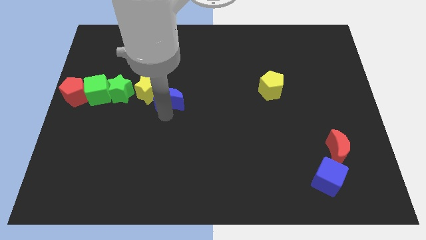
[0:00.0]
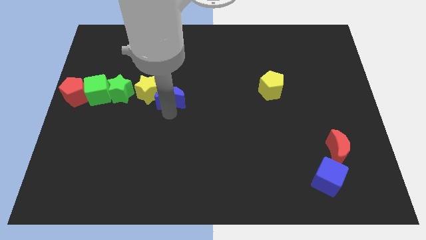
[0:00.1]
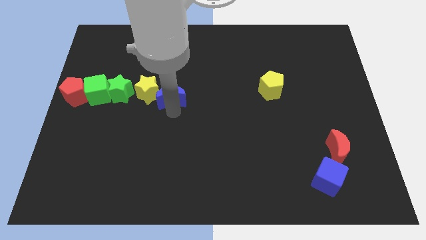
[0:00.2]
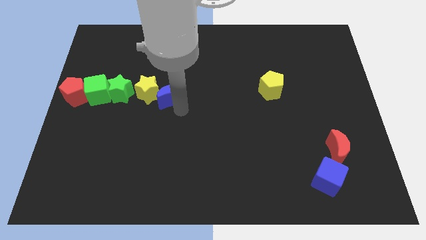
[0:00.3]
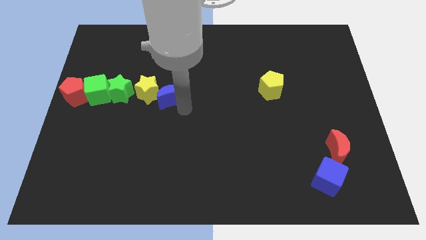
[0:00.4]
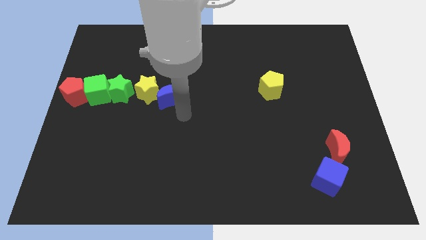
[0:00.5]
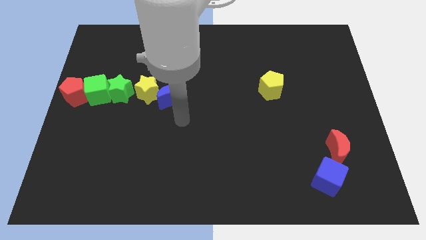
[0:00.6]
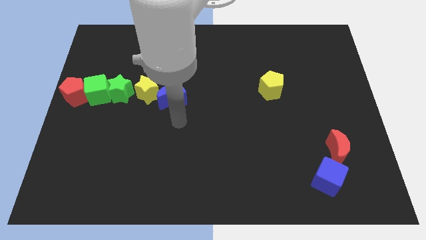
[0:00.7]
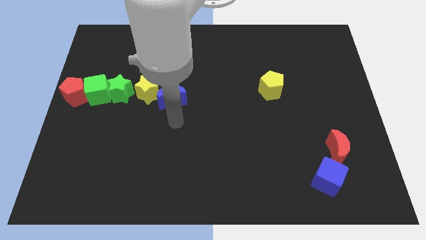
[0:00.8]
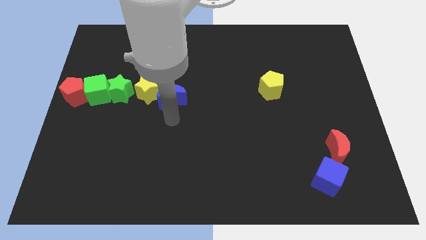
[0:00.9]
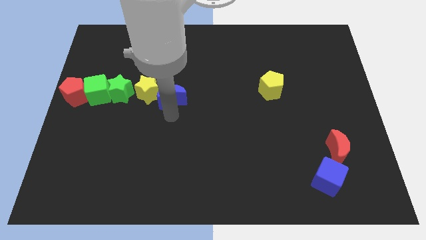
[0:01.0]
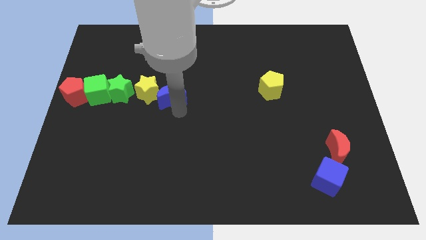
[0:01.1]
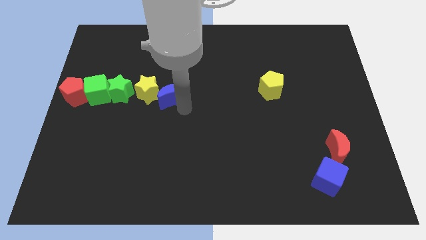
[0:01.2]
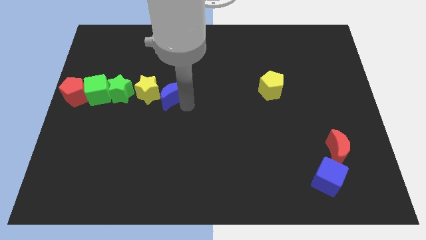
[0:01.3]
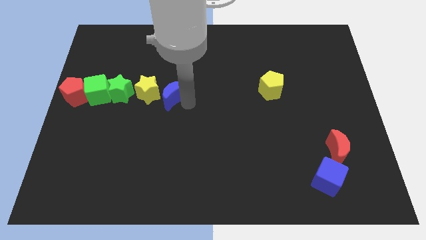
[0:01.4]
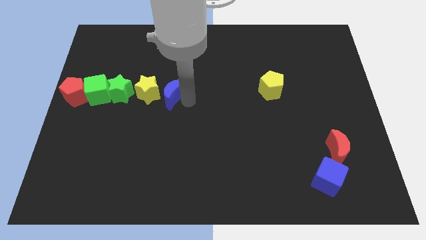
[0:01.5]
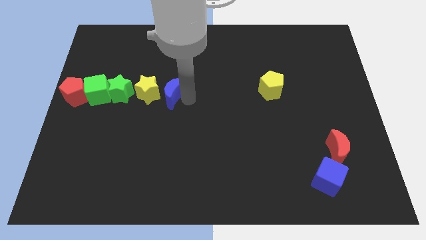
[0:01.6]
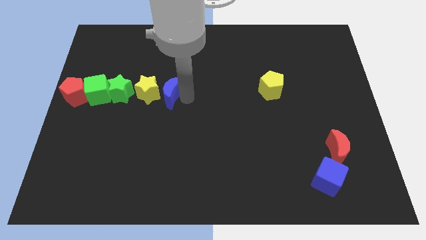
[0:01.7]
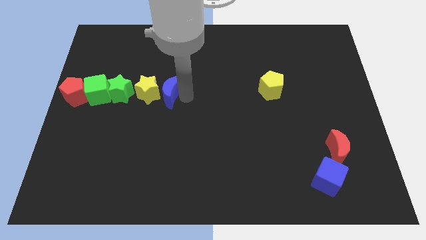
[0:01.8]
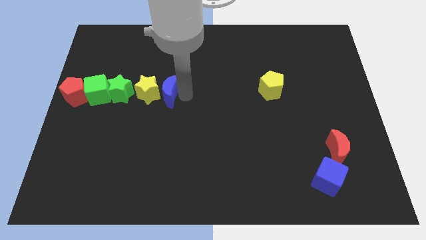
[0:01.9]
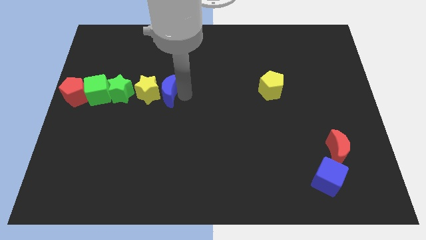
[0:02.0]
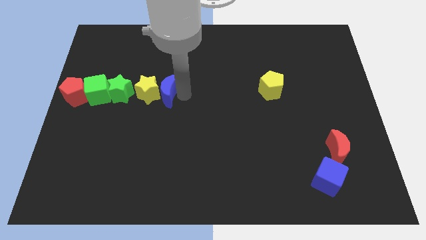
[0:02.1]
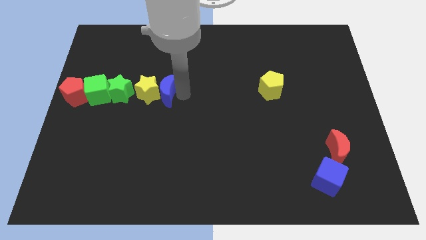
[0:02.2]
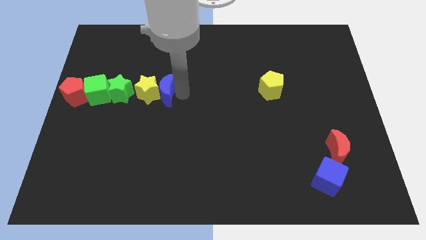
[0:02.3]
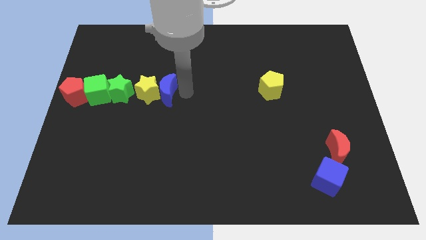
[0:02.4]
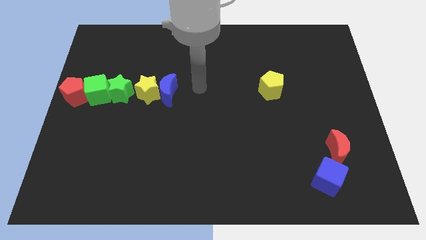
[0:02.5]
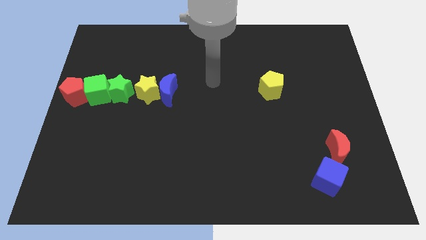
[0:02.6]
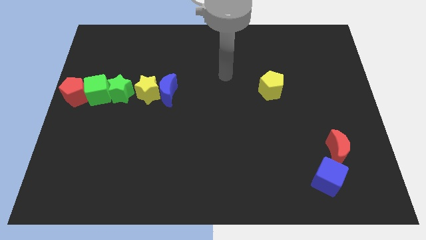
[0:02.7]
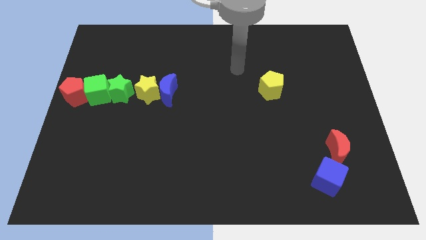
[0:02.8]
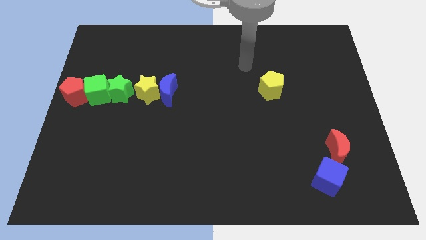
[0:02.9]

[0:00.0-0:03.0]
move the blue crescent to the right side of the yellow star

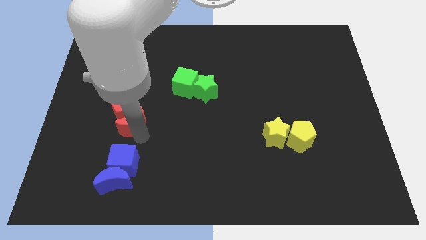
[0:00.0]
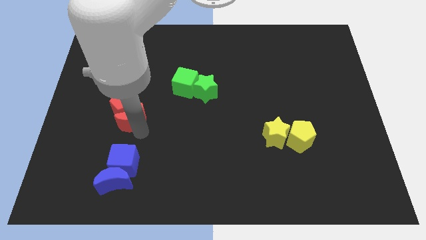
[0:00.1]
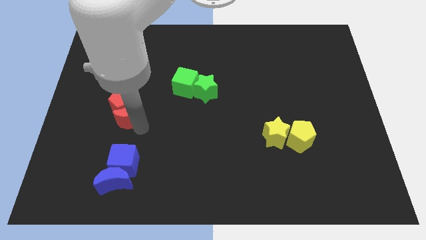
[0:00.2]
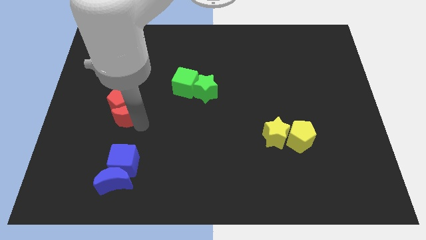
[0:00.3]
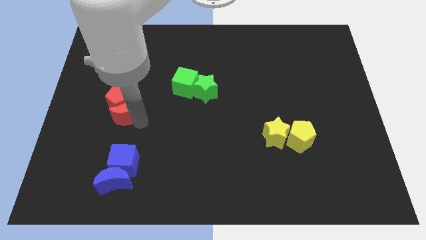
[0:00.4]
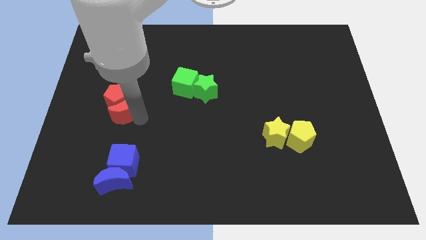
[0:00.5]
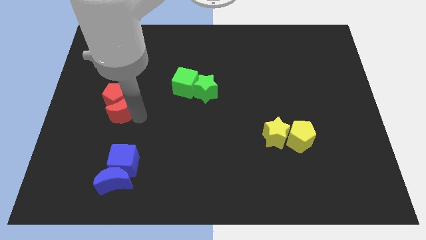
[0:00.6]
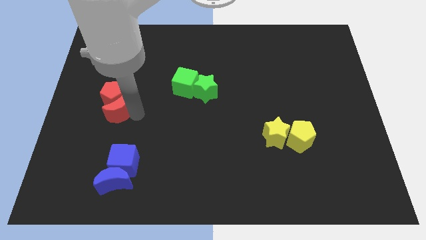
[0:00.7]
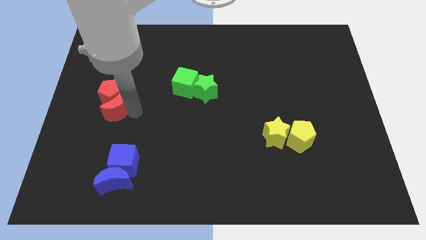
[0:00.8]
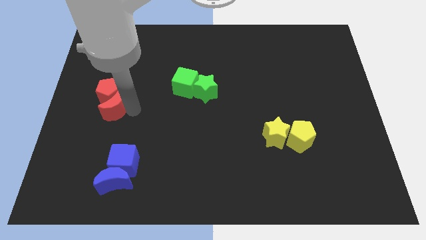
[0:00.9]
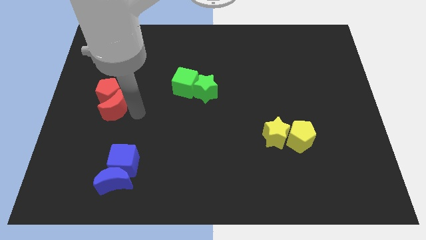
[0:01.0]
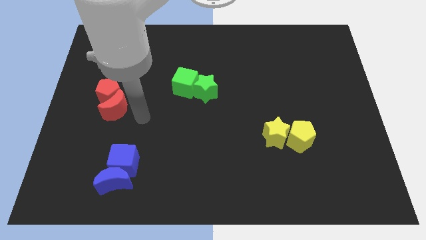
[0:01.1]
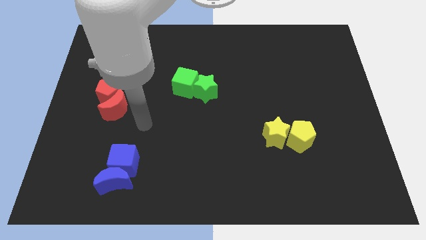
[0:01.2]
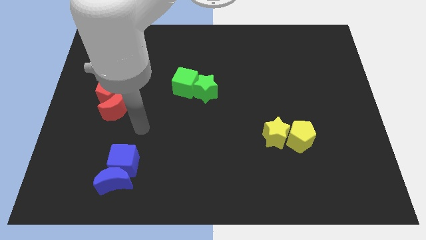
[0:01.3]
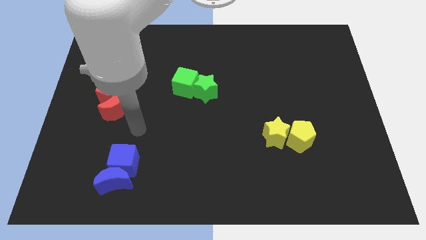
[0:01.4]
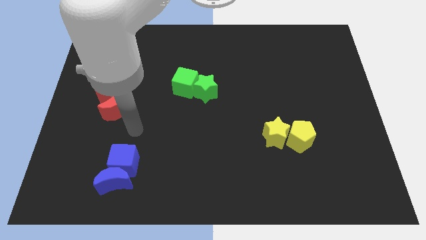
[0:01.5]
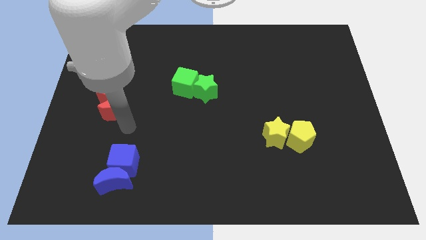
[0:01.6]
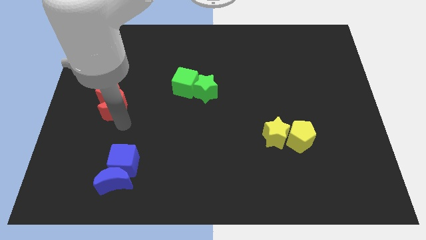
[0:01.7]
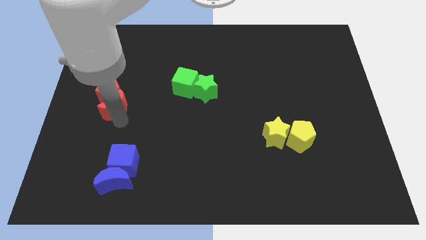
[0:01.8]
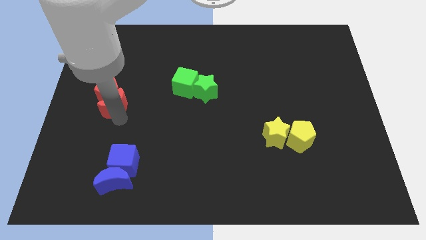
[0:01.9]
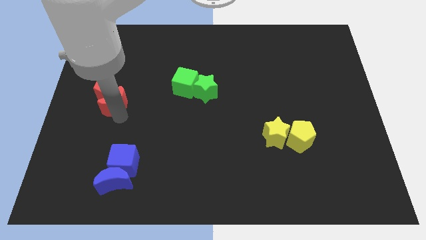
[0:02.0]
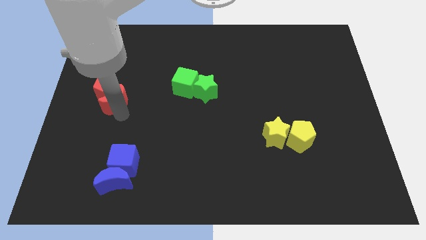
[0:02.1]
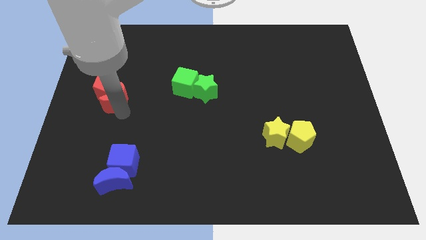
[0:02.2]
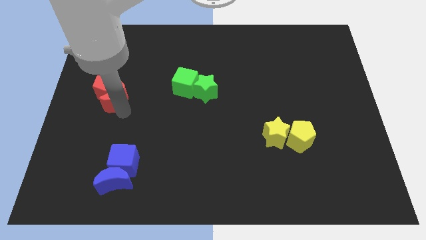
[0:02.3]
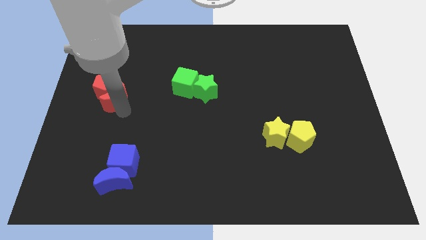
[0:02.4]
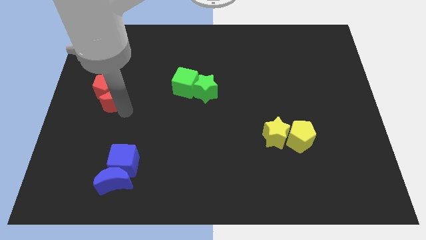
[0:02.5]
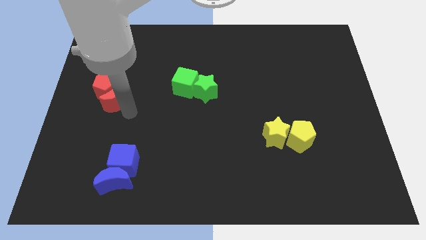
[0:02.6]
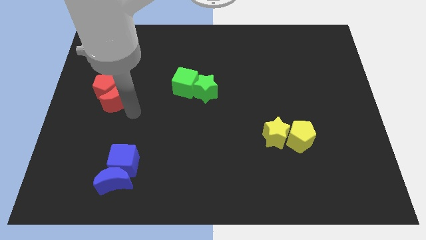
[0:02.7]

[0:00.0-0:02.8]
drag the red crescent with red pentagon slight left side of the board

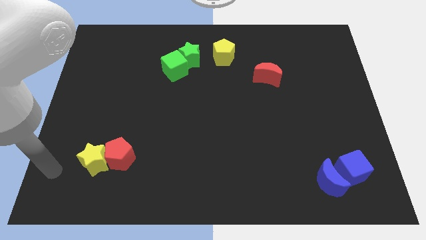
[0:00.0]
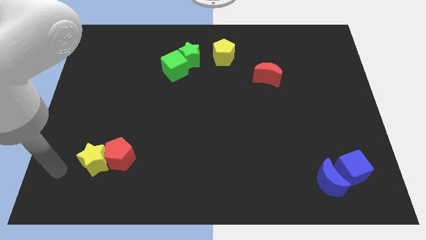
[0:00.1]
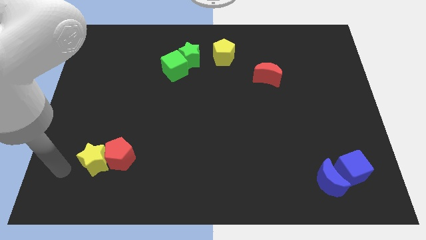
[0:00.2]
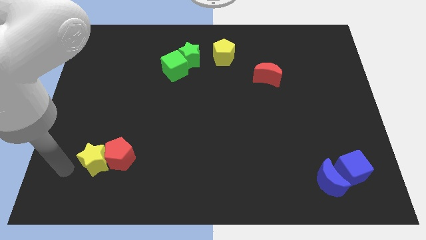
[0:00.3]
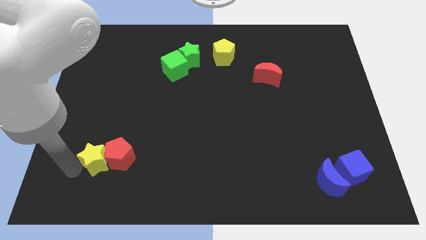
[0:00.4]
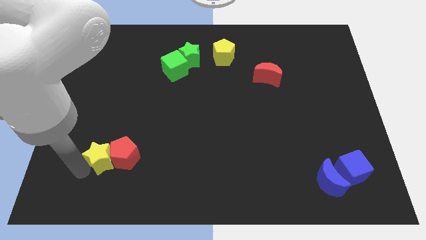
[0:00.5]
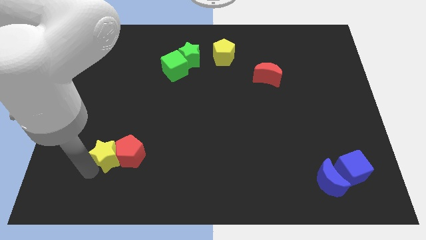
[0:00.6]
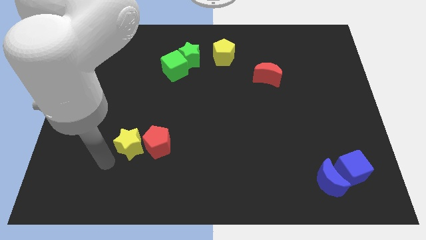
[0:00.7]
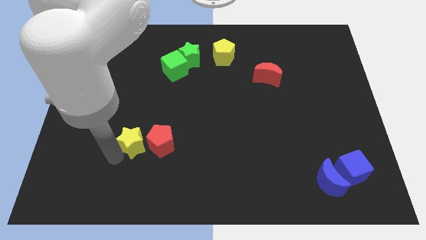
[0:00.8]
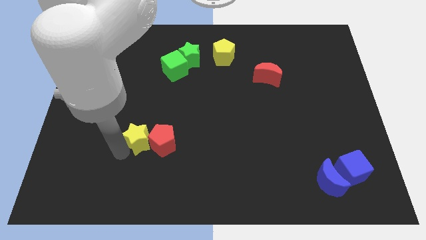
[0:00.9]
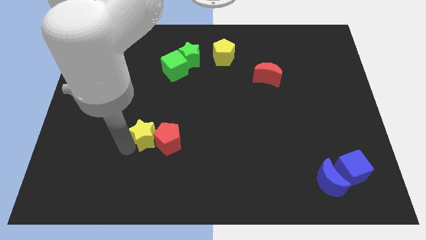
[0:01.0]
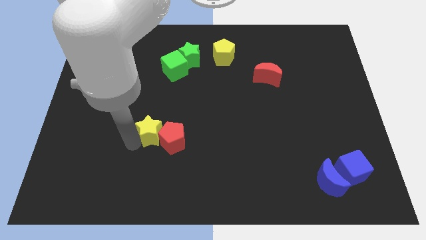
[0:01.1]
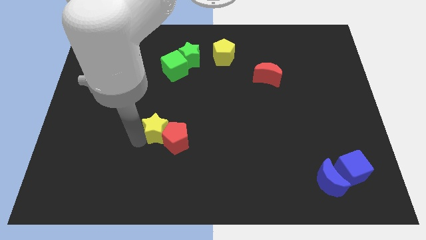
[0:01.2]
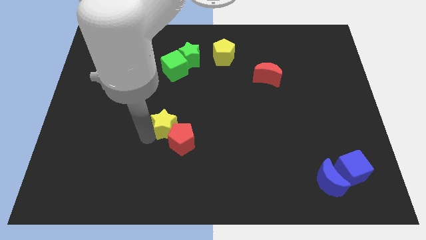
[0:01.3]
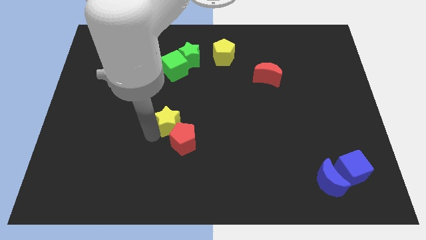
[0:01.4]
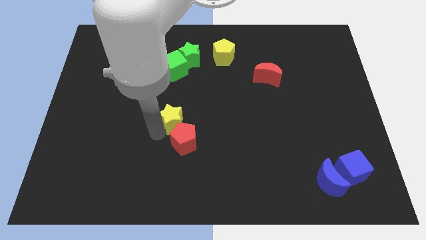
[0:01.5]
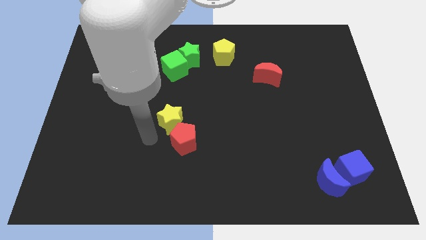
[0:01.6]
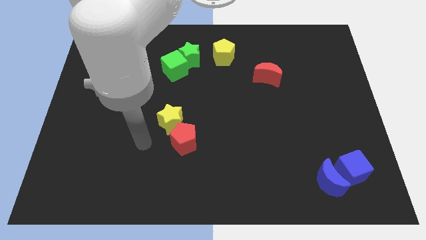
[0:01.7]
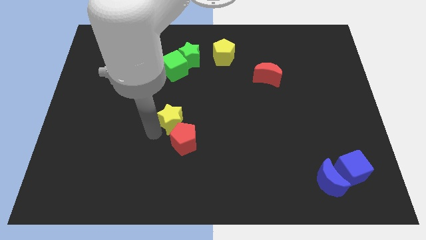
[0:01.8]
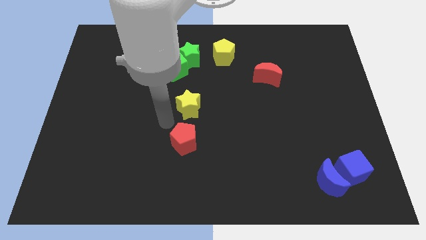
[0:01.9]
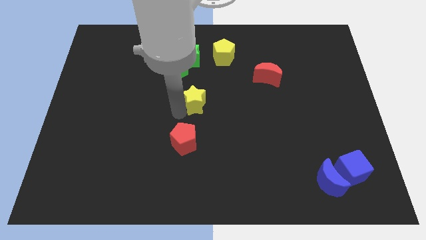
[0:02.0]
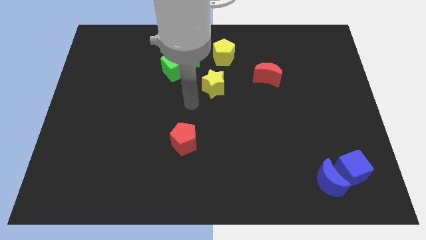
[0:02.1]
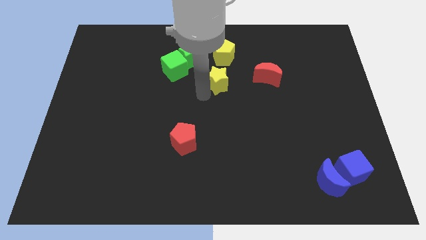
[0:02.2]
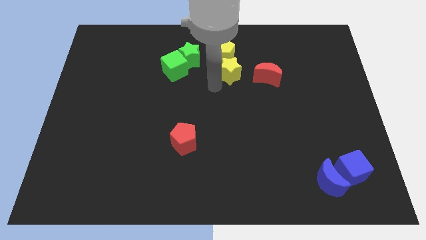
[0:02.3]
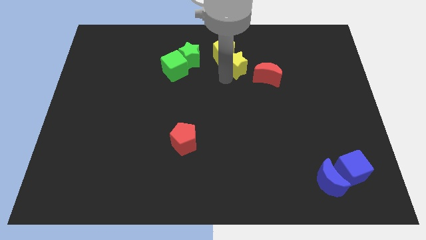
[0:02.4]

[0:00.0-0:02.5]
push the yellow star at the bottom of the yellow pentagon

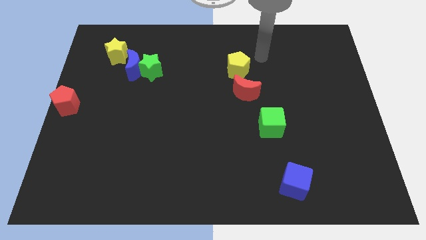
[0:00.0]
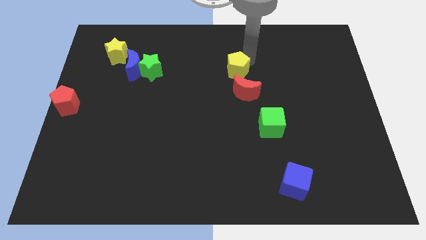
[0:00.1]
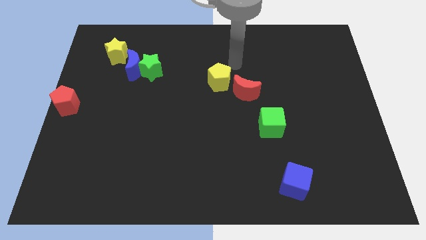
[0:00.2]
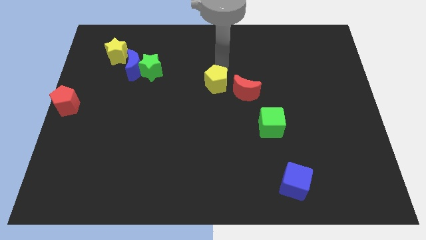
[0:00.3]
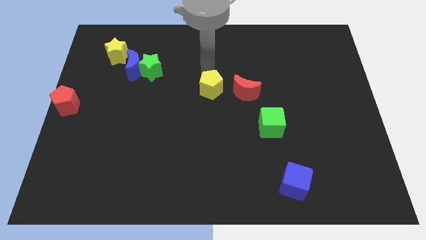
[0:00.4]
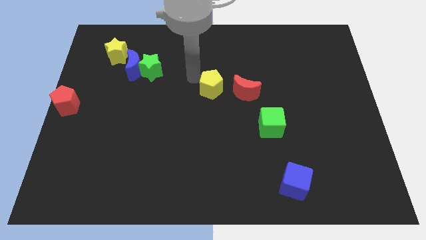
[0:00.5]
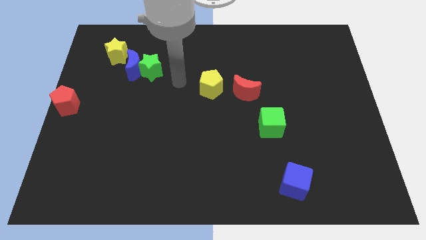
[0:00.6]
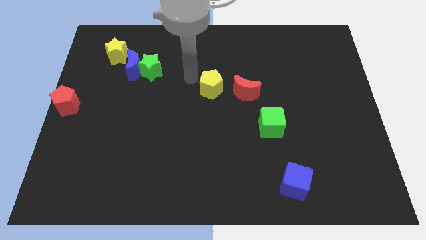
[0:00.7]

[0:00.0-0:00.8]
move the yellow pentagon to the left side of the red crescent
